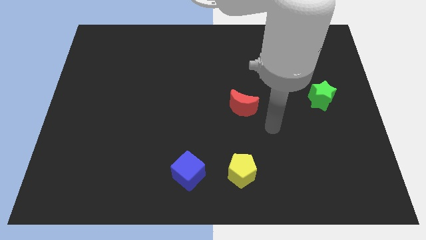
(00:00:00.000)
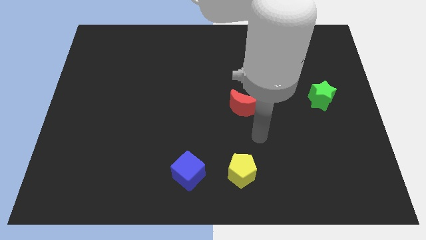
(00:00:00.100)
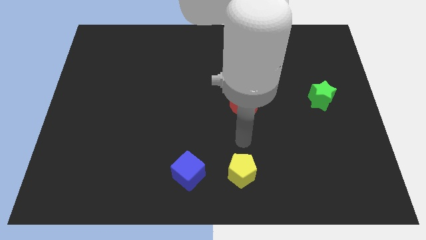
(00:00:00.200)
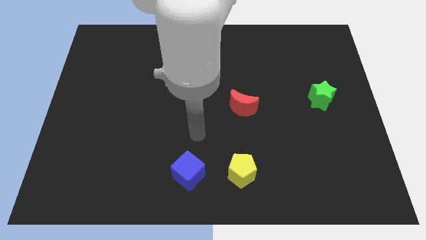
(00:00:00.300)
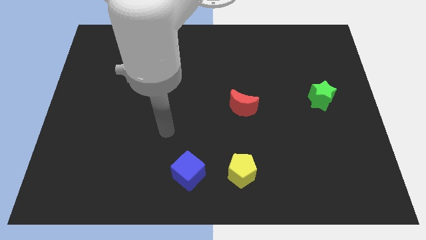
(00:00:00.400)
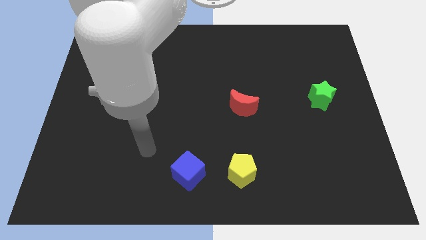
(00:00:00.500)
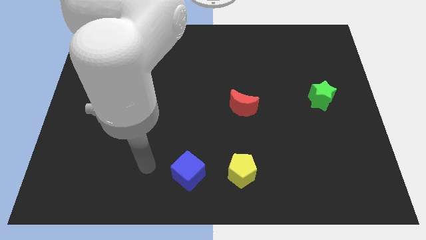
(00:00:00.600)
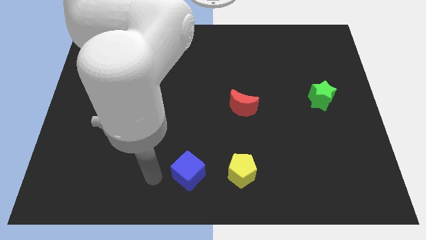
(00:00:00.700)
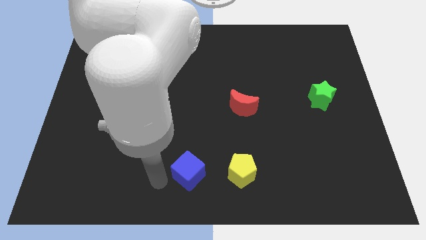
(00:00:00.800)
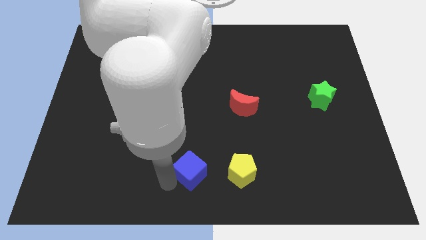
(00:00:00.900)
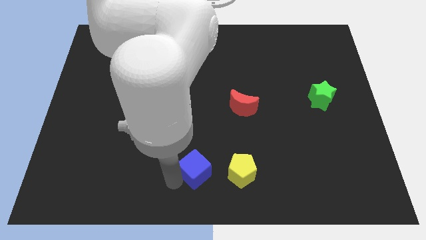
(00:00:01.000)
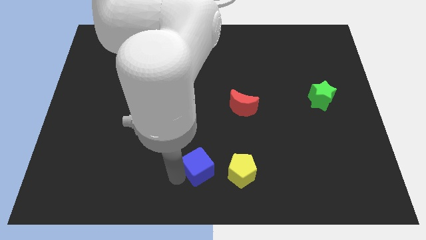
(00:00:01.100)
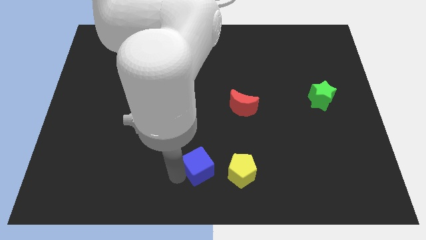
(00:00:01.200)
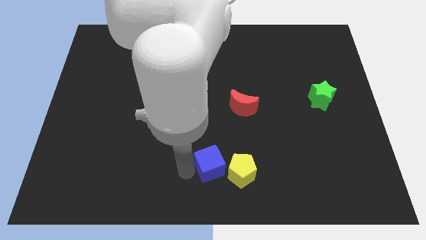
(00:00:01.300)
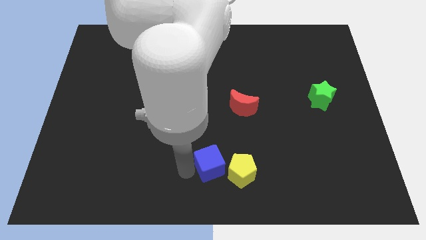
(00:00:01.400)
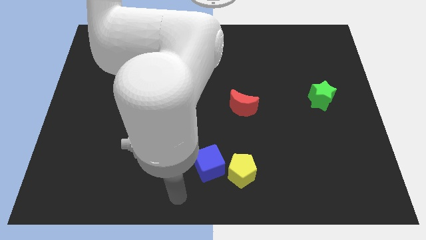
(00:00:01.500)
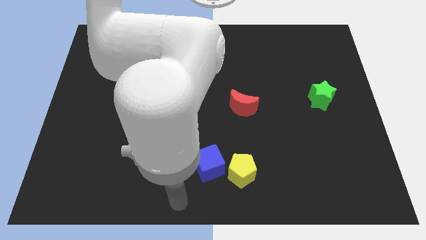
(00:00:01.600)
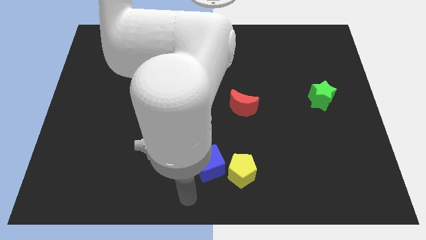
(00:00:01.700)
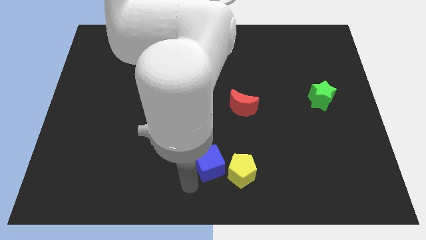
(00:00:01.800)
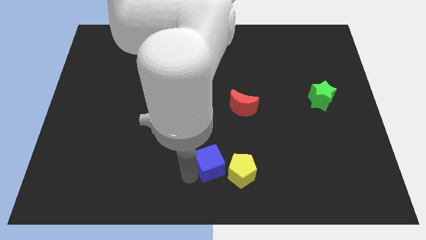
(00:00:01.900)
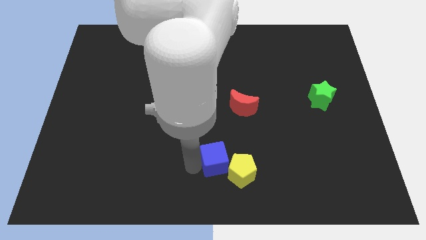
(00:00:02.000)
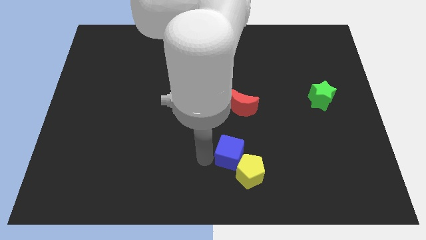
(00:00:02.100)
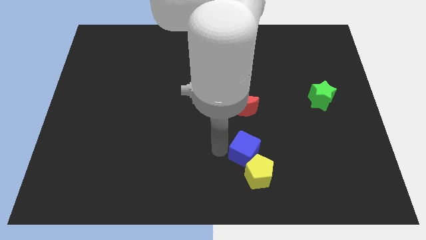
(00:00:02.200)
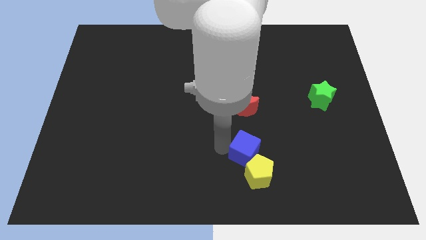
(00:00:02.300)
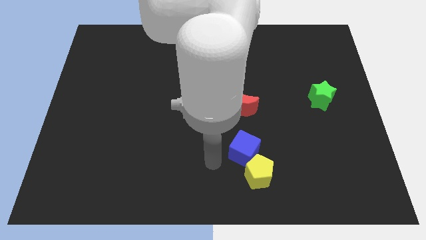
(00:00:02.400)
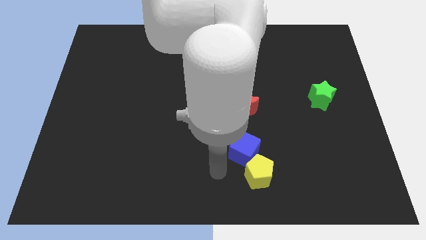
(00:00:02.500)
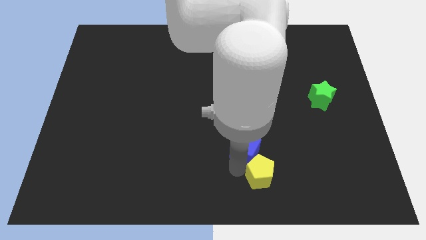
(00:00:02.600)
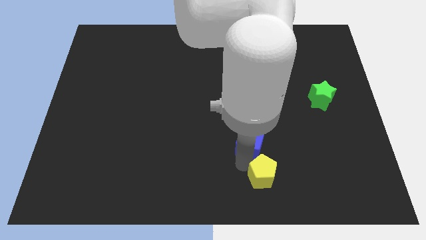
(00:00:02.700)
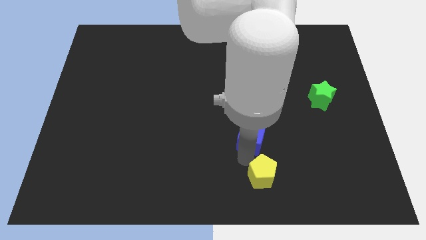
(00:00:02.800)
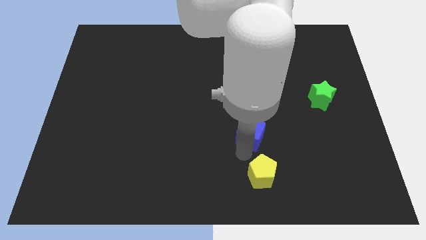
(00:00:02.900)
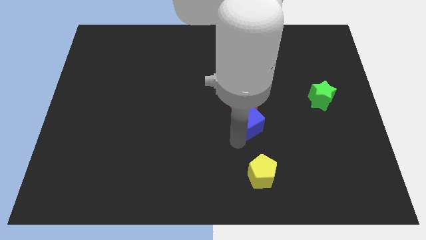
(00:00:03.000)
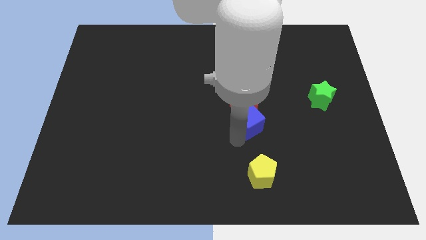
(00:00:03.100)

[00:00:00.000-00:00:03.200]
push the blue block towards the red moon

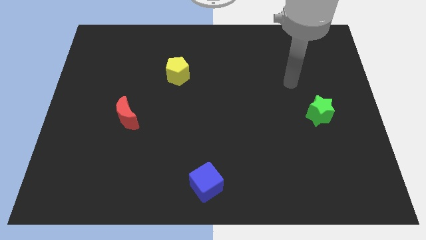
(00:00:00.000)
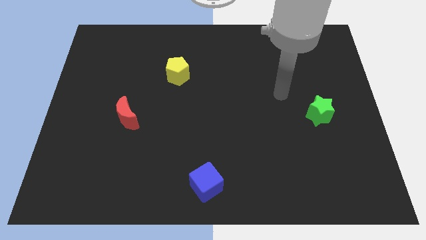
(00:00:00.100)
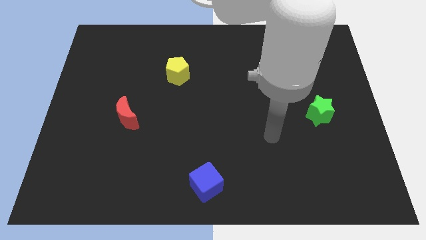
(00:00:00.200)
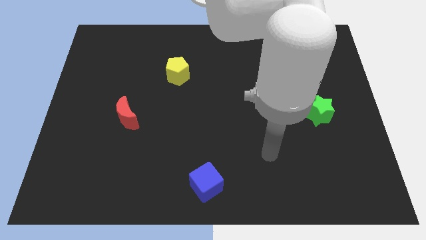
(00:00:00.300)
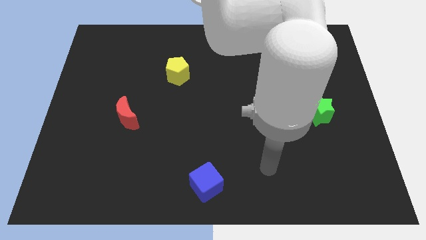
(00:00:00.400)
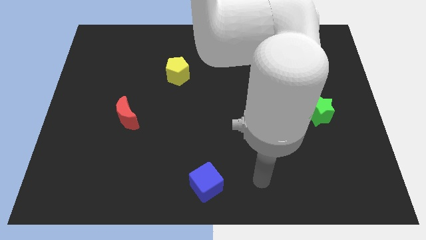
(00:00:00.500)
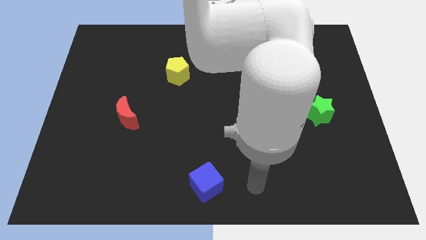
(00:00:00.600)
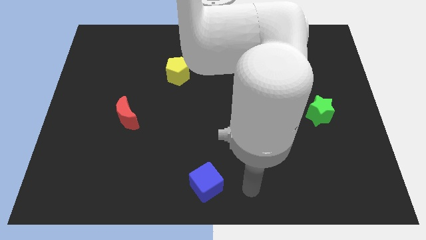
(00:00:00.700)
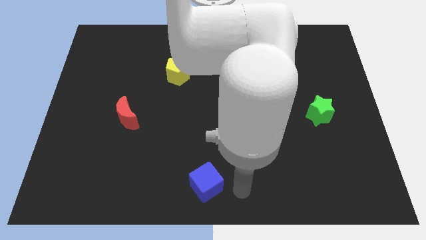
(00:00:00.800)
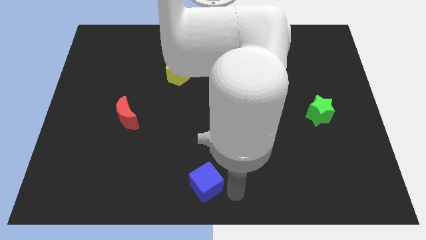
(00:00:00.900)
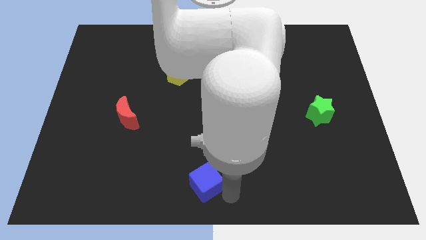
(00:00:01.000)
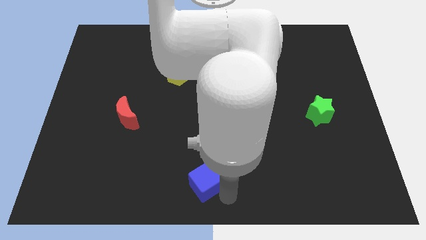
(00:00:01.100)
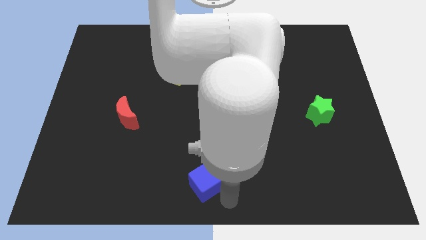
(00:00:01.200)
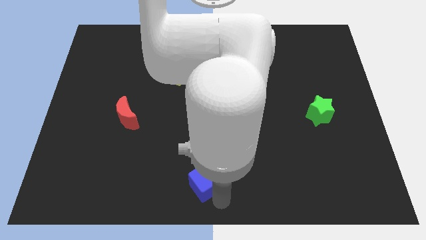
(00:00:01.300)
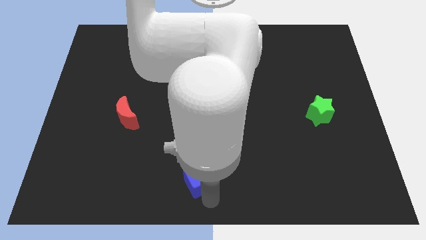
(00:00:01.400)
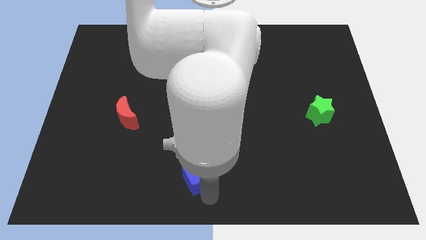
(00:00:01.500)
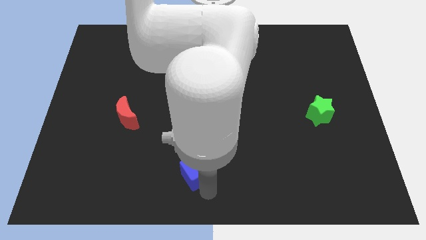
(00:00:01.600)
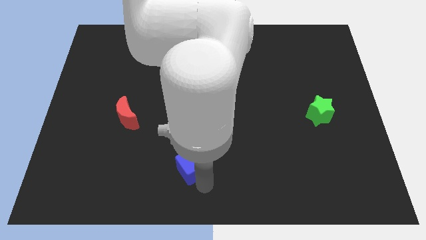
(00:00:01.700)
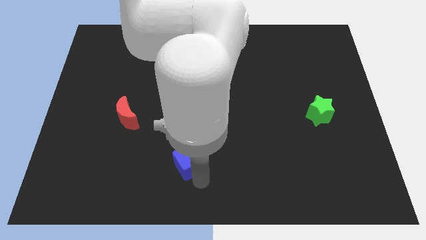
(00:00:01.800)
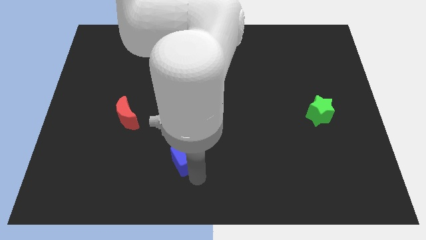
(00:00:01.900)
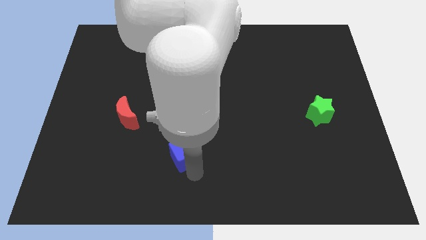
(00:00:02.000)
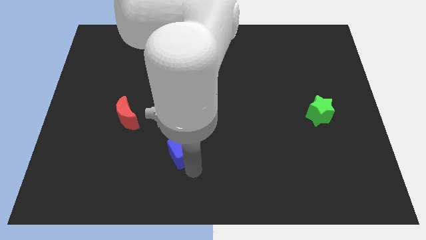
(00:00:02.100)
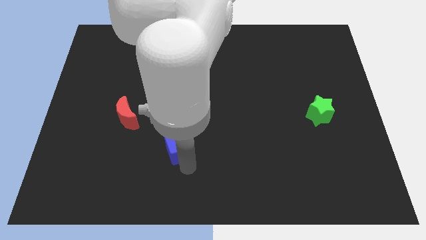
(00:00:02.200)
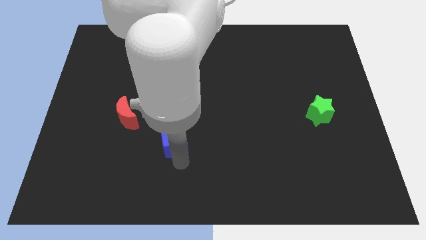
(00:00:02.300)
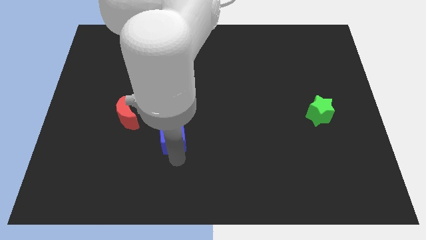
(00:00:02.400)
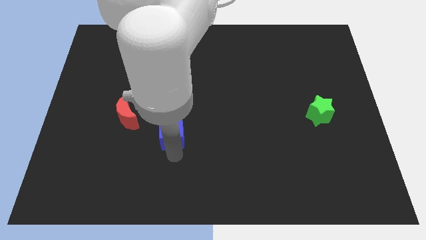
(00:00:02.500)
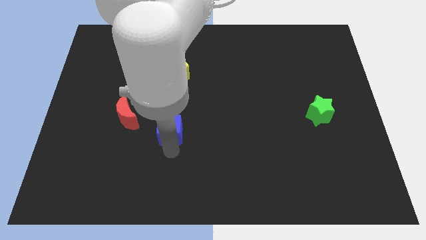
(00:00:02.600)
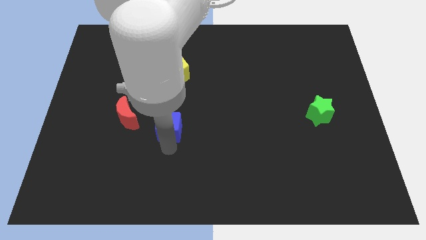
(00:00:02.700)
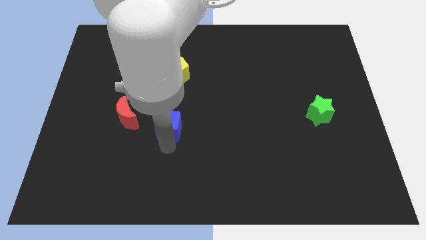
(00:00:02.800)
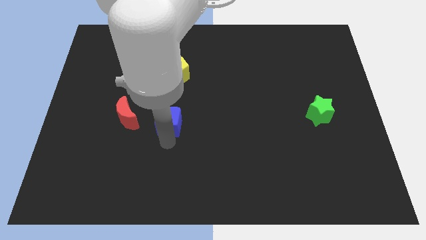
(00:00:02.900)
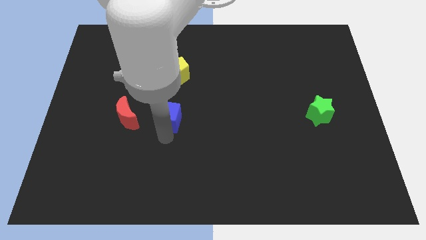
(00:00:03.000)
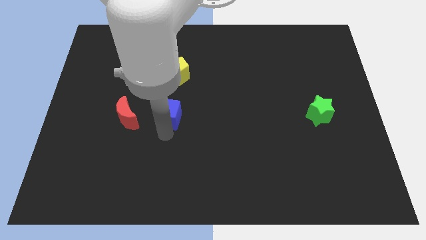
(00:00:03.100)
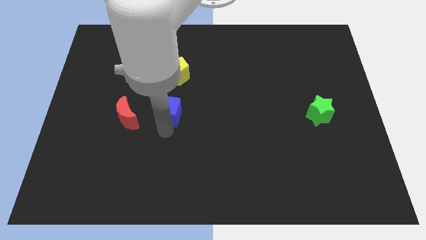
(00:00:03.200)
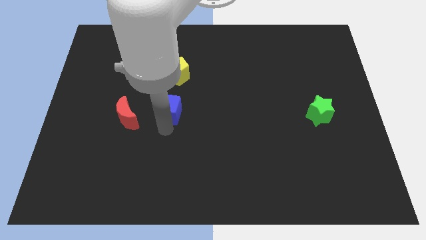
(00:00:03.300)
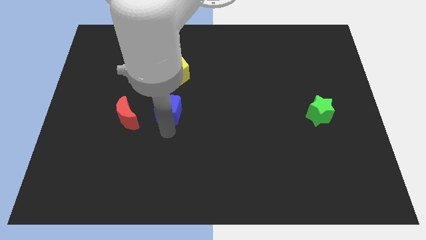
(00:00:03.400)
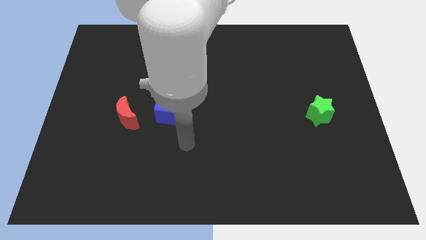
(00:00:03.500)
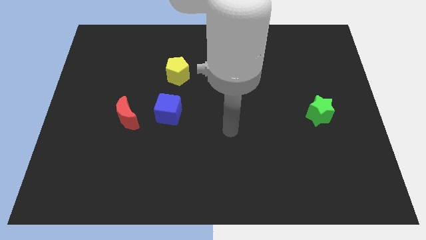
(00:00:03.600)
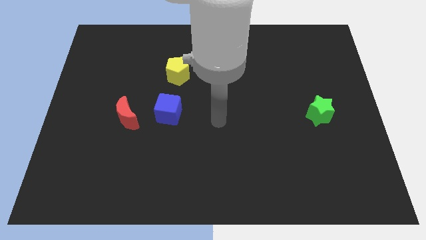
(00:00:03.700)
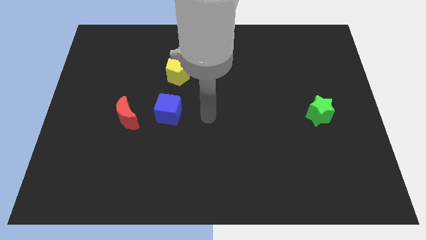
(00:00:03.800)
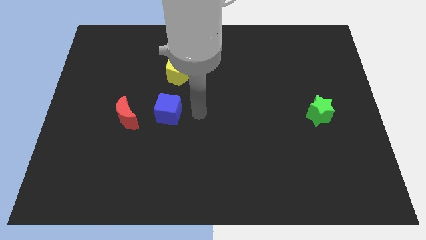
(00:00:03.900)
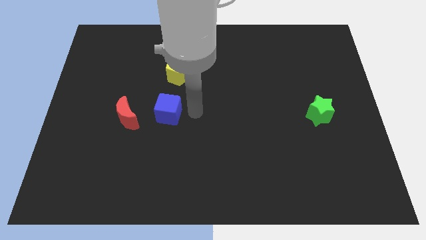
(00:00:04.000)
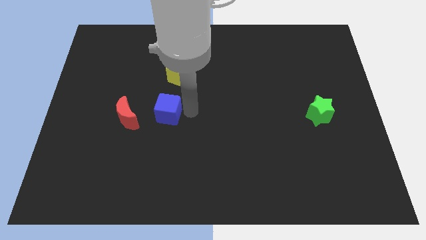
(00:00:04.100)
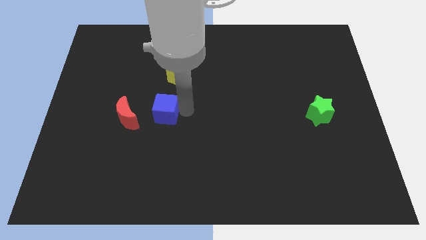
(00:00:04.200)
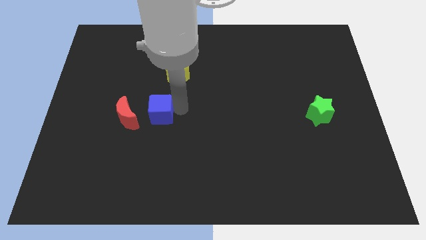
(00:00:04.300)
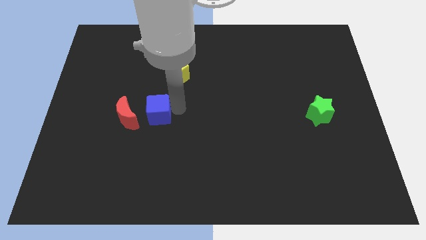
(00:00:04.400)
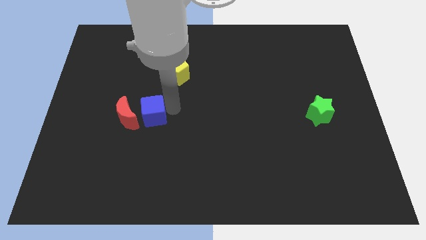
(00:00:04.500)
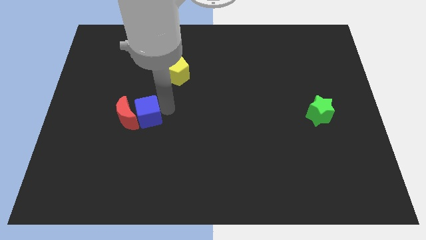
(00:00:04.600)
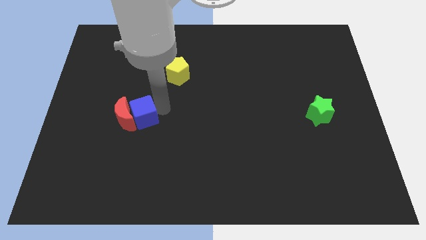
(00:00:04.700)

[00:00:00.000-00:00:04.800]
slide the blue cube towards the red block
